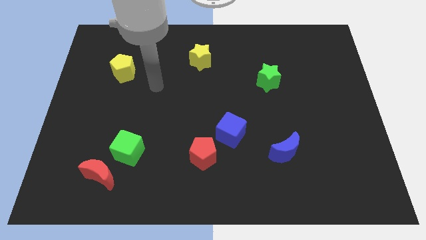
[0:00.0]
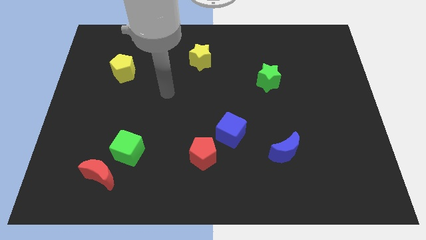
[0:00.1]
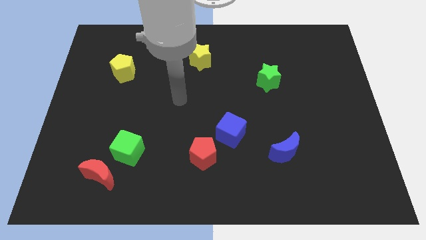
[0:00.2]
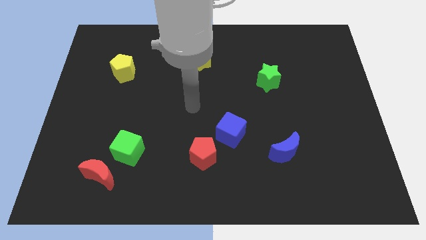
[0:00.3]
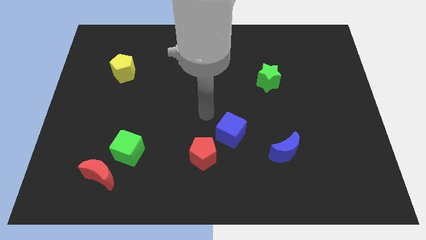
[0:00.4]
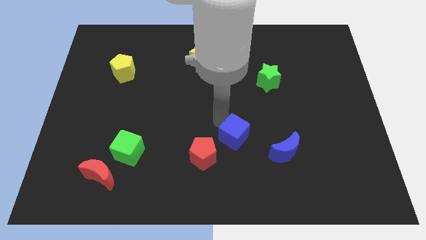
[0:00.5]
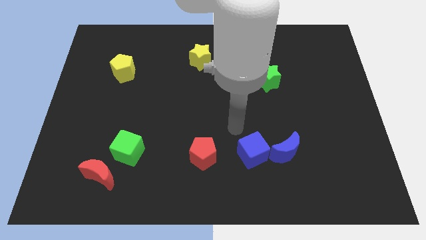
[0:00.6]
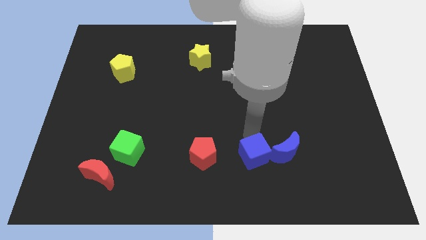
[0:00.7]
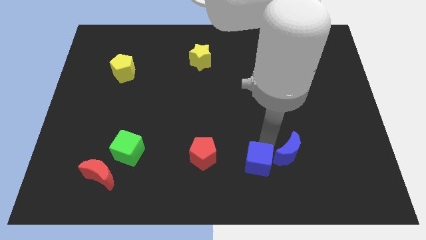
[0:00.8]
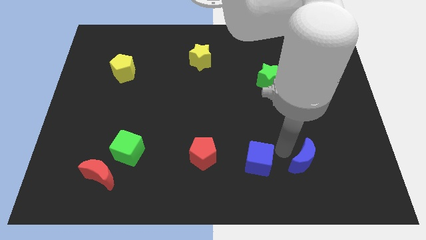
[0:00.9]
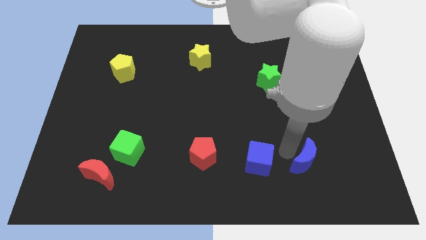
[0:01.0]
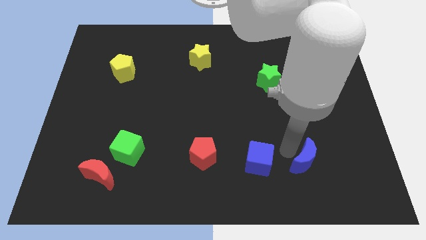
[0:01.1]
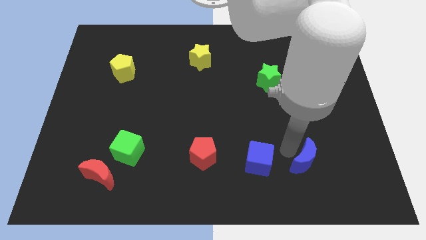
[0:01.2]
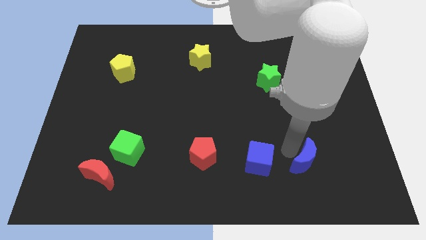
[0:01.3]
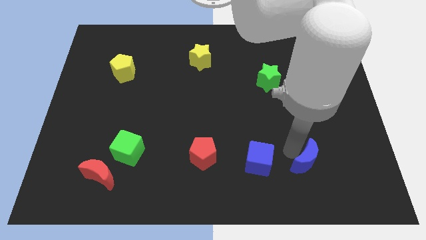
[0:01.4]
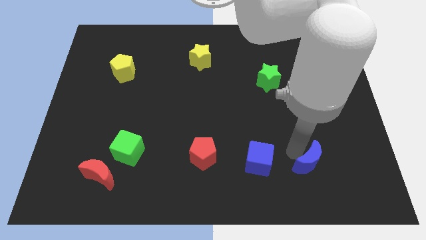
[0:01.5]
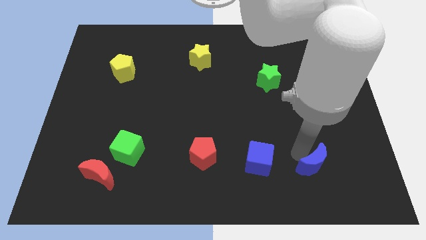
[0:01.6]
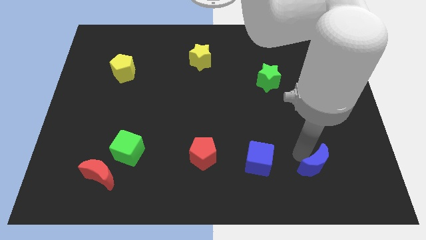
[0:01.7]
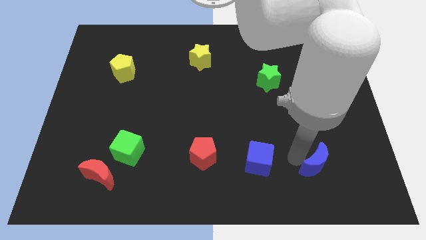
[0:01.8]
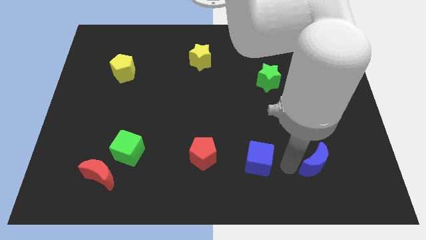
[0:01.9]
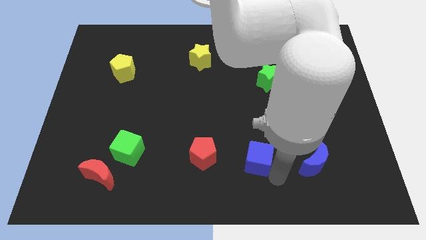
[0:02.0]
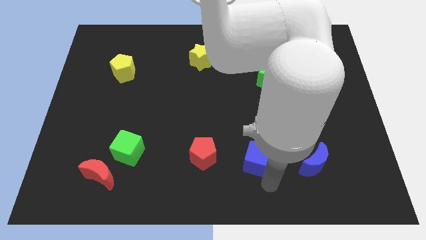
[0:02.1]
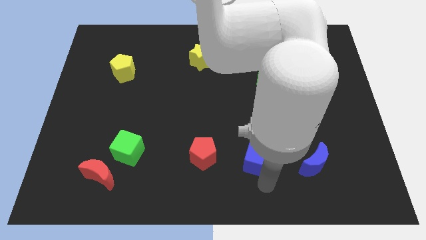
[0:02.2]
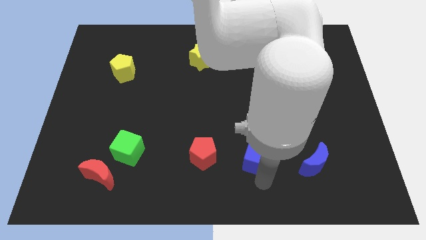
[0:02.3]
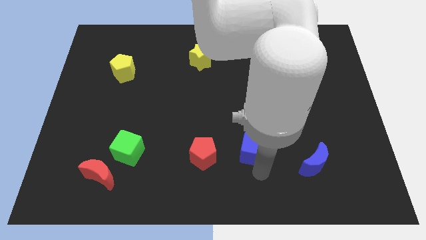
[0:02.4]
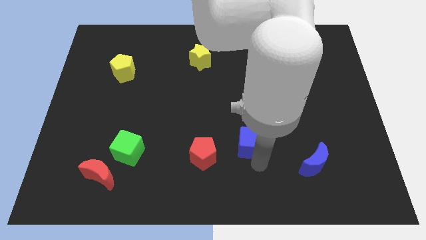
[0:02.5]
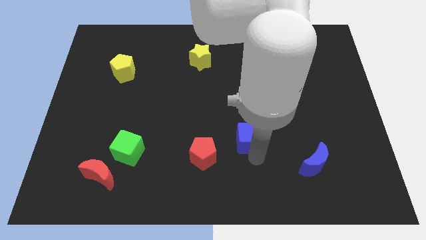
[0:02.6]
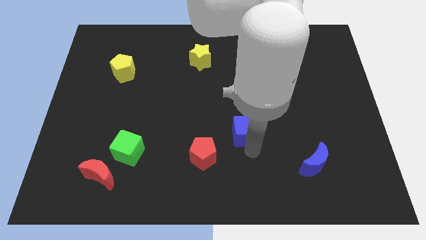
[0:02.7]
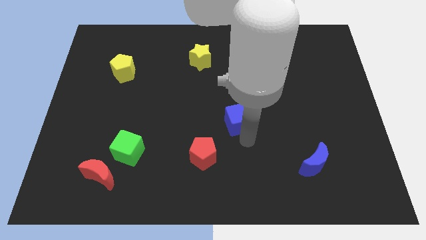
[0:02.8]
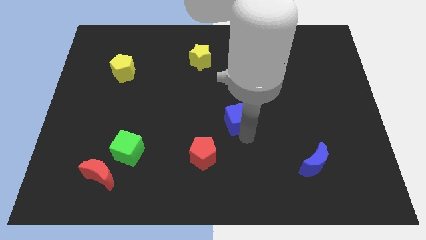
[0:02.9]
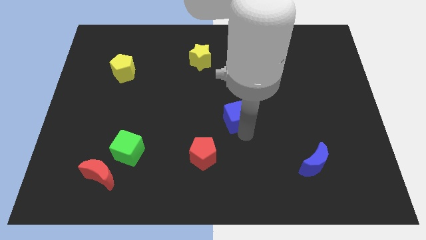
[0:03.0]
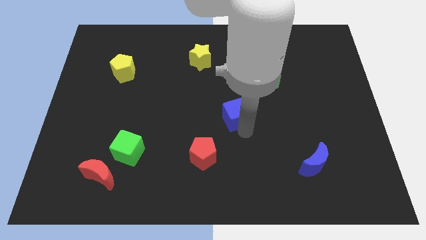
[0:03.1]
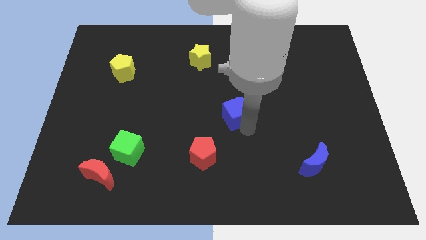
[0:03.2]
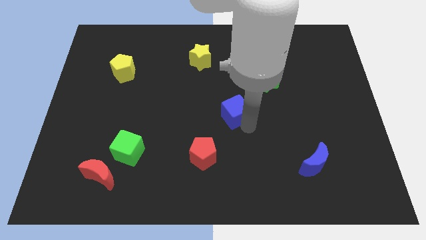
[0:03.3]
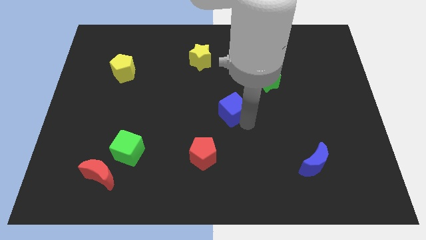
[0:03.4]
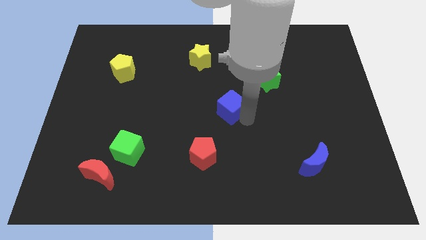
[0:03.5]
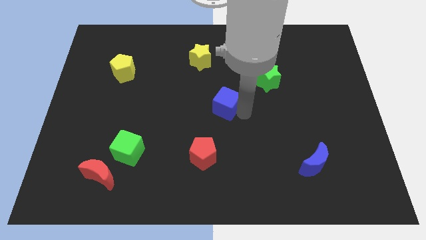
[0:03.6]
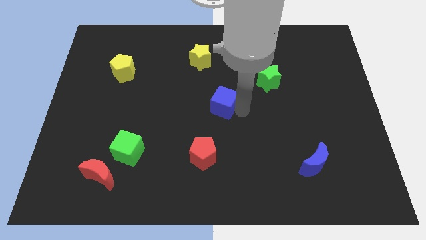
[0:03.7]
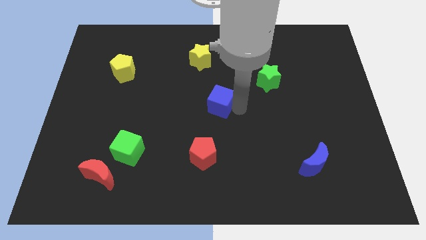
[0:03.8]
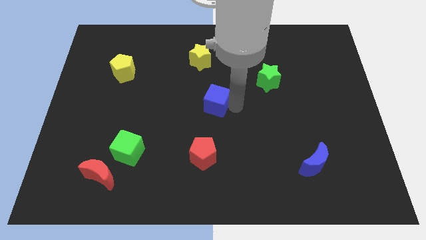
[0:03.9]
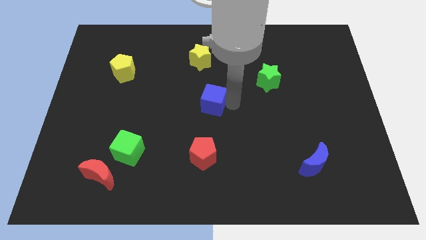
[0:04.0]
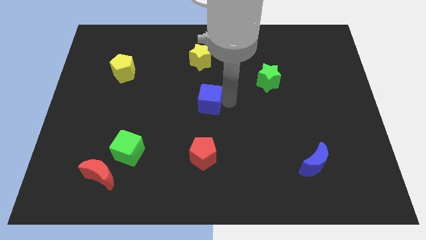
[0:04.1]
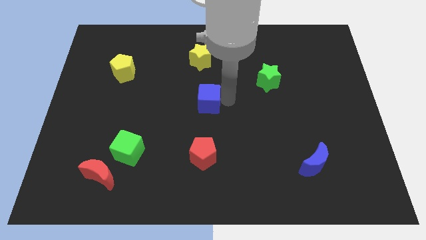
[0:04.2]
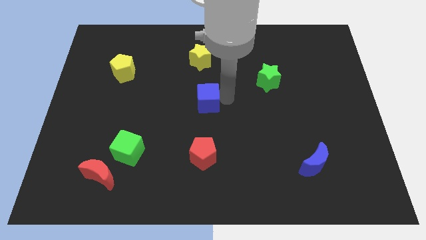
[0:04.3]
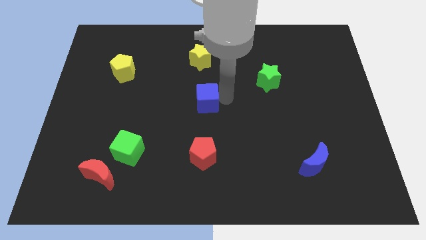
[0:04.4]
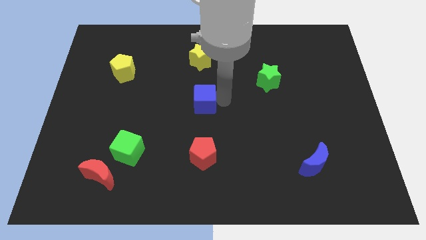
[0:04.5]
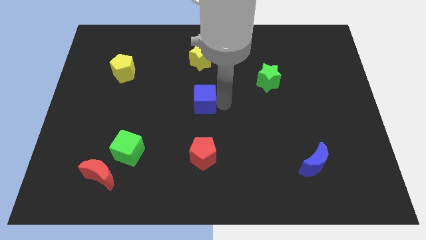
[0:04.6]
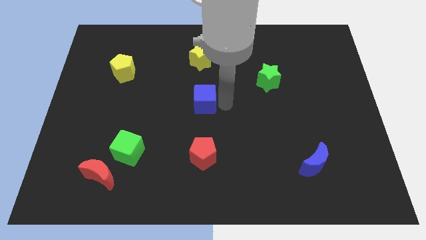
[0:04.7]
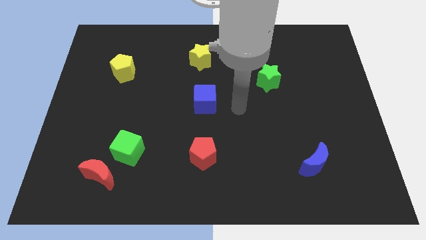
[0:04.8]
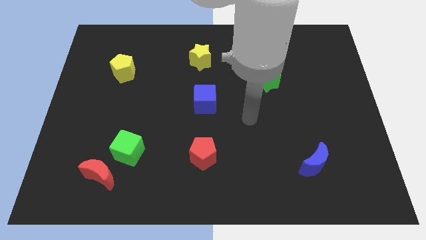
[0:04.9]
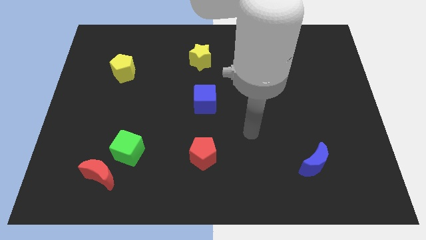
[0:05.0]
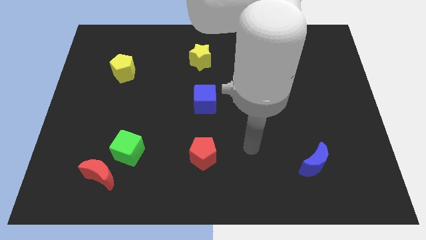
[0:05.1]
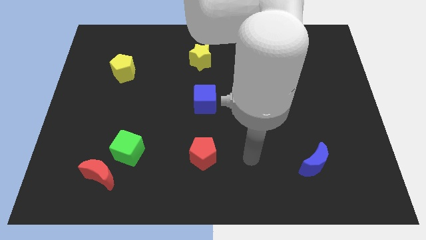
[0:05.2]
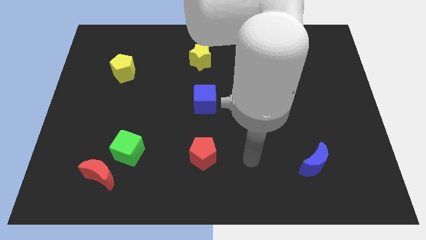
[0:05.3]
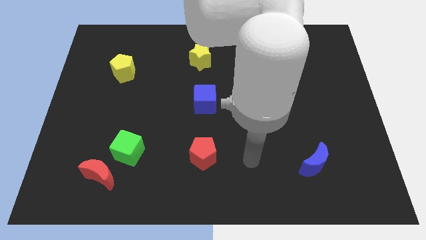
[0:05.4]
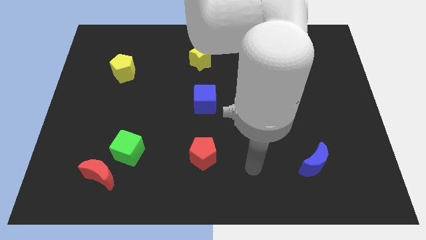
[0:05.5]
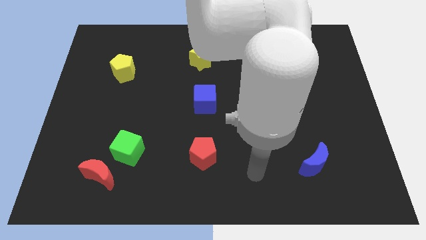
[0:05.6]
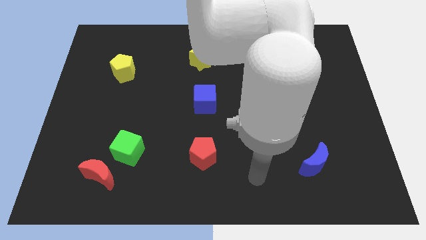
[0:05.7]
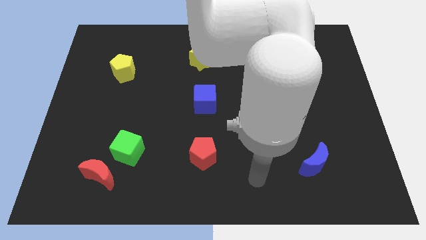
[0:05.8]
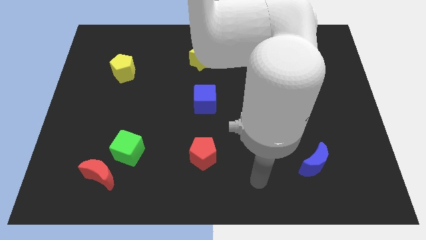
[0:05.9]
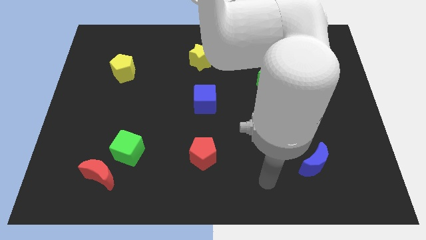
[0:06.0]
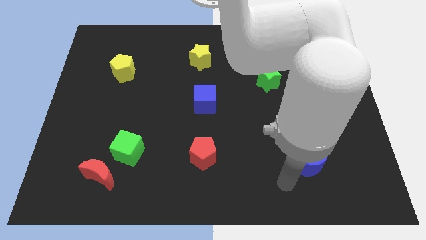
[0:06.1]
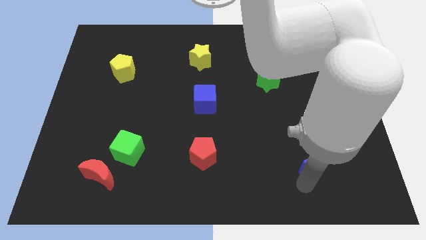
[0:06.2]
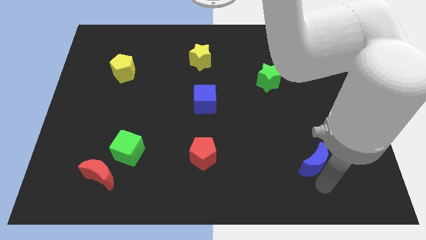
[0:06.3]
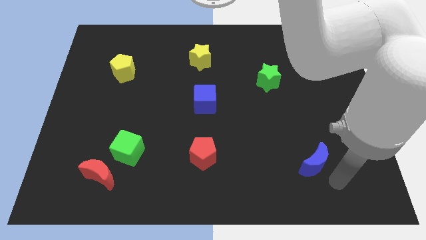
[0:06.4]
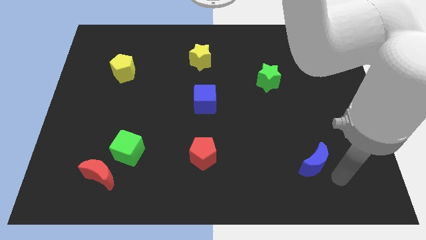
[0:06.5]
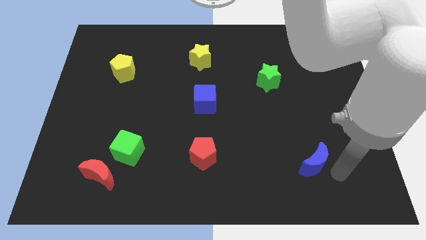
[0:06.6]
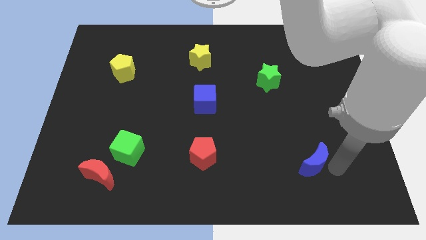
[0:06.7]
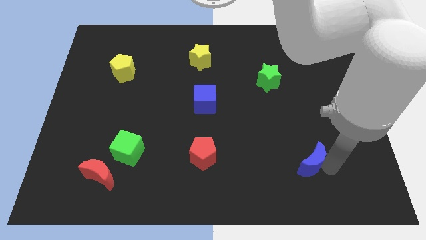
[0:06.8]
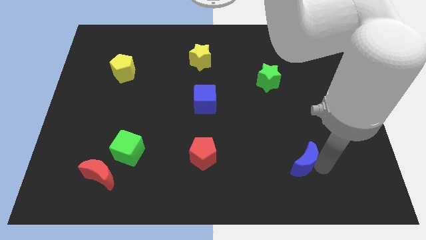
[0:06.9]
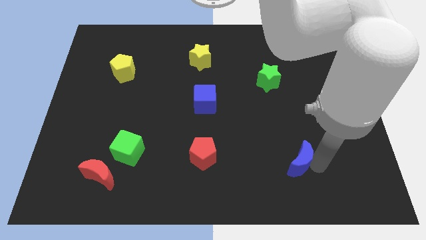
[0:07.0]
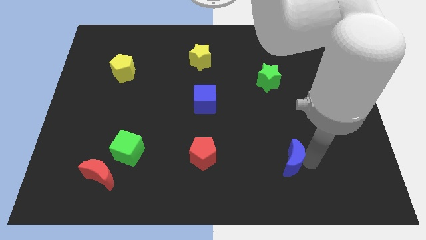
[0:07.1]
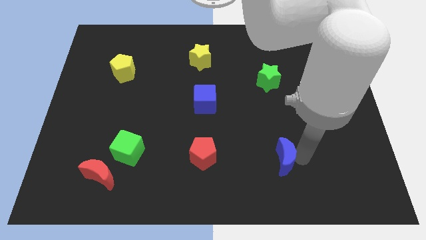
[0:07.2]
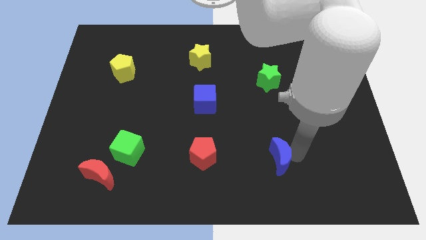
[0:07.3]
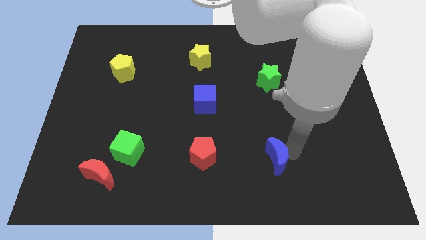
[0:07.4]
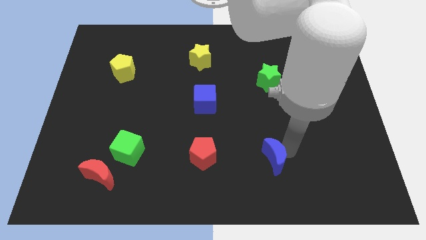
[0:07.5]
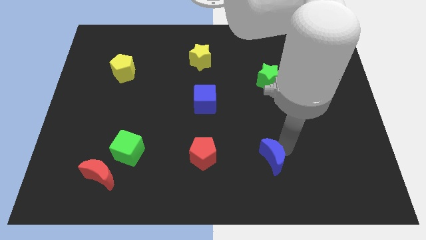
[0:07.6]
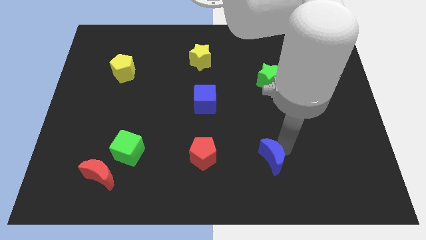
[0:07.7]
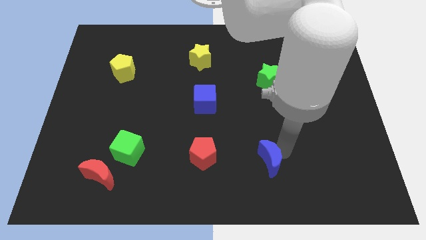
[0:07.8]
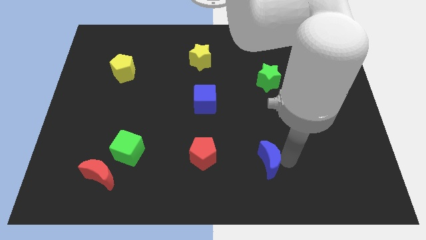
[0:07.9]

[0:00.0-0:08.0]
place the blue cube below the yellow star

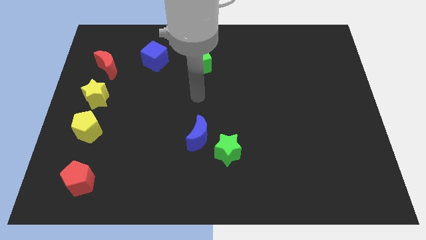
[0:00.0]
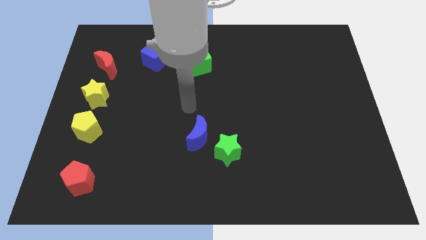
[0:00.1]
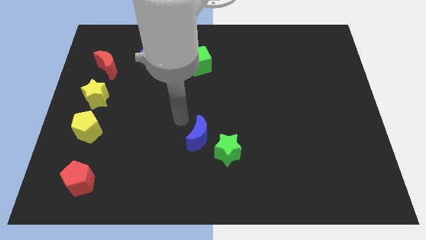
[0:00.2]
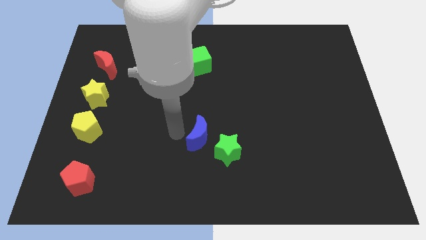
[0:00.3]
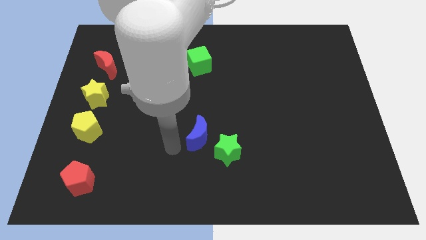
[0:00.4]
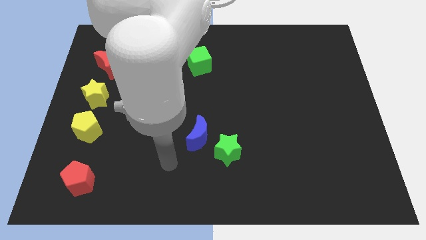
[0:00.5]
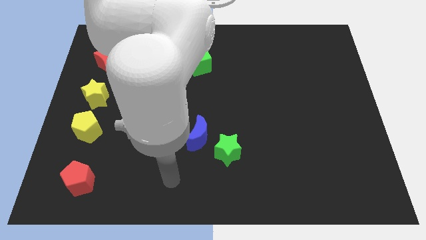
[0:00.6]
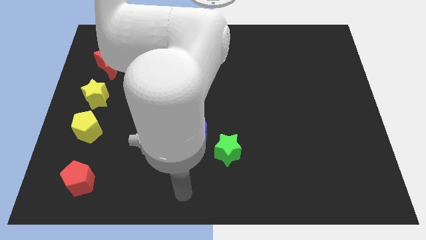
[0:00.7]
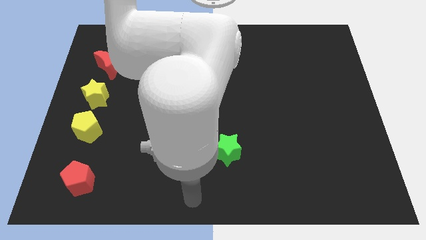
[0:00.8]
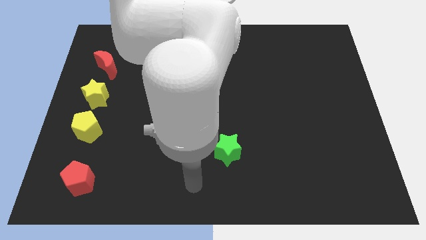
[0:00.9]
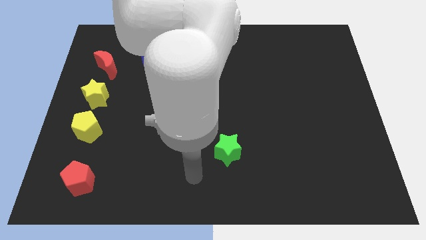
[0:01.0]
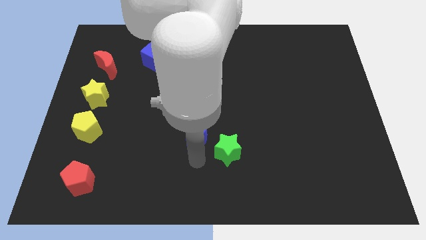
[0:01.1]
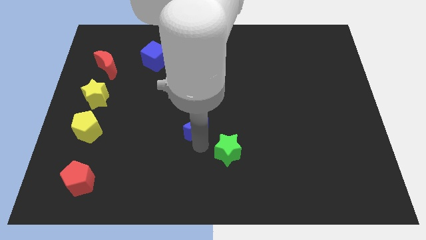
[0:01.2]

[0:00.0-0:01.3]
drag the blue moon diagonally top right to red pentgaon
